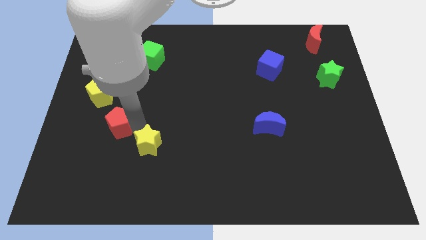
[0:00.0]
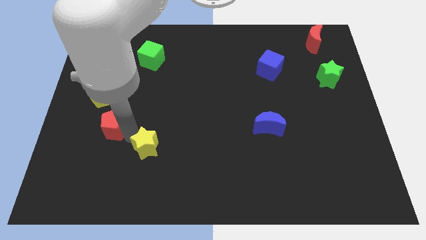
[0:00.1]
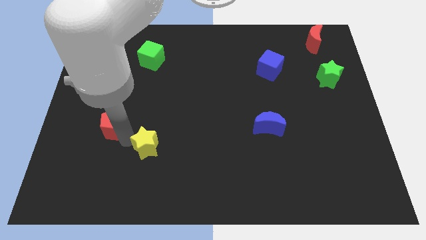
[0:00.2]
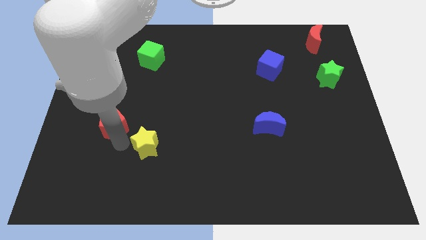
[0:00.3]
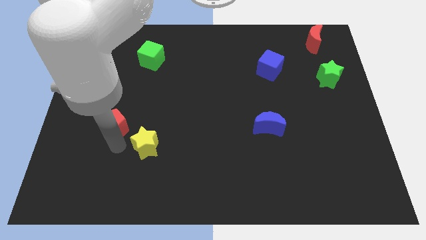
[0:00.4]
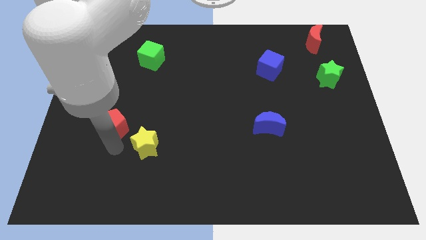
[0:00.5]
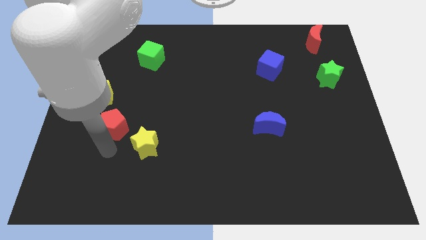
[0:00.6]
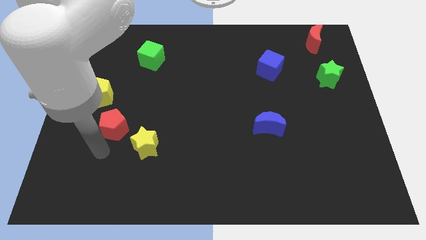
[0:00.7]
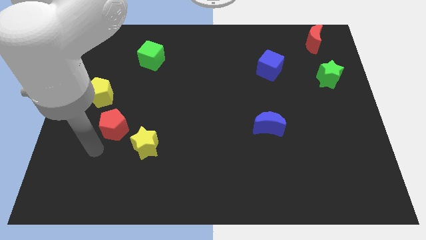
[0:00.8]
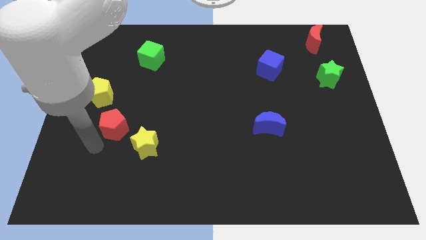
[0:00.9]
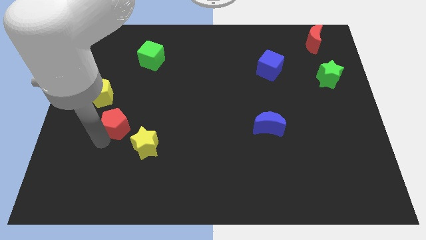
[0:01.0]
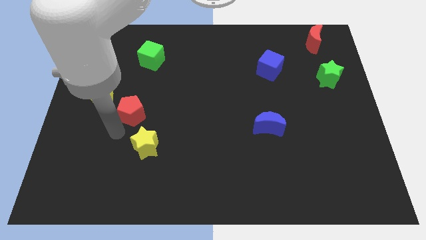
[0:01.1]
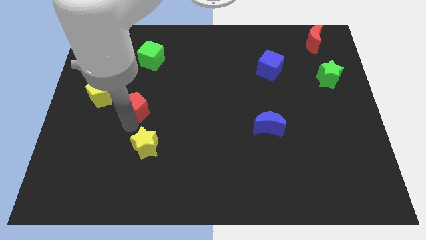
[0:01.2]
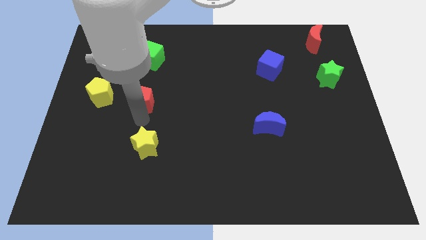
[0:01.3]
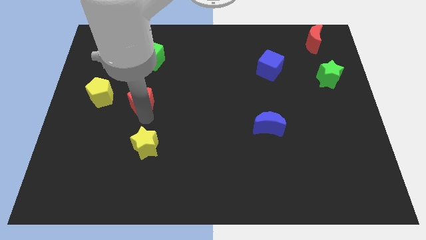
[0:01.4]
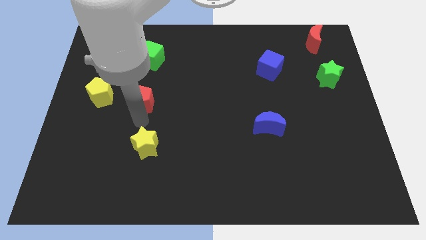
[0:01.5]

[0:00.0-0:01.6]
place the red pentagon in between the green cube and yellow star

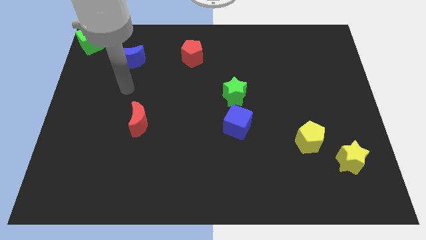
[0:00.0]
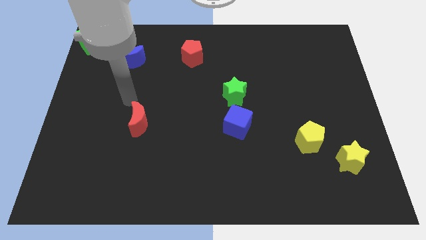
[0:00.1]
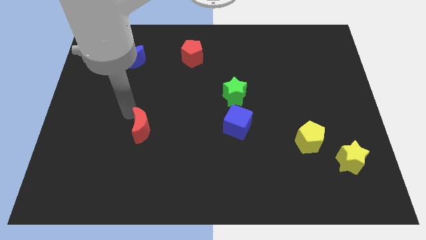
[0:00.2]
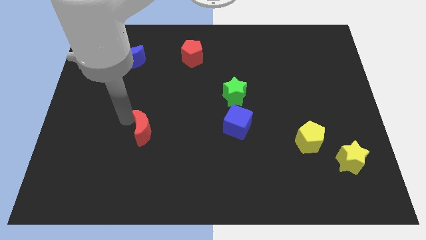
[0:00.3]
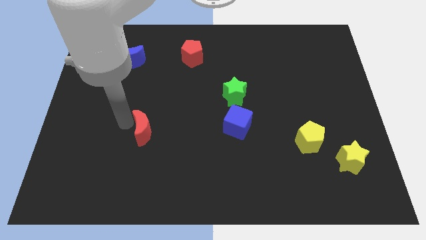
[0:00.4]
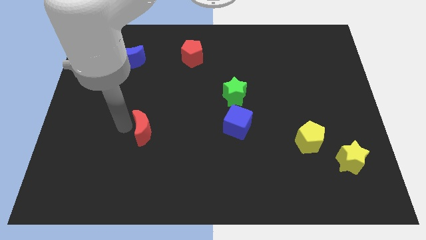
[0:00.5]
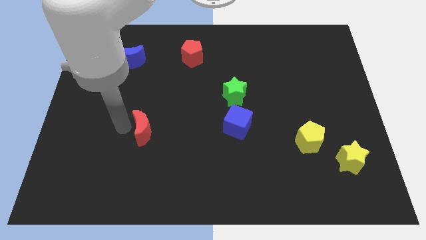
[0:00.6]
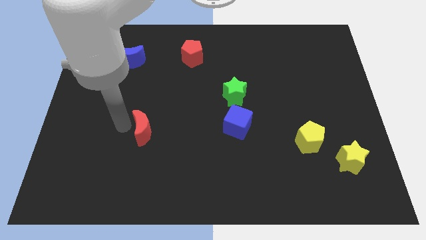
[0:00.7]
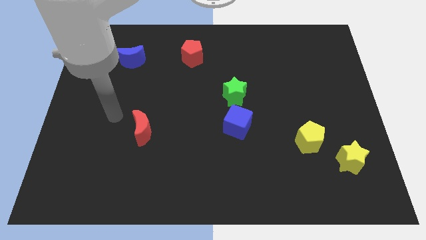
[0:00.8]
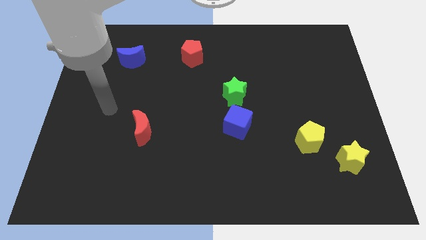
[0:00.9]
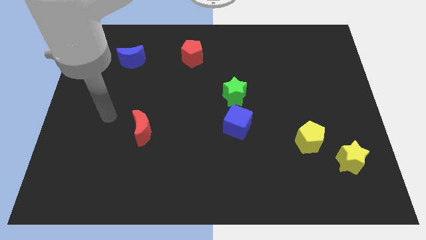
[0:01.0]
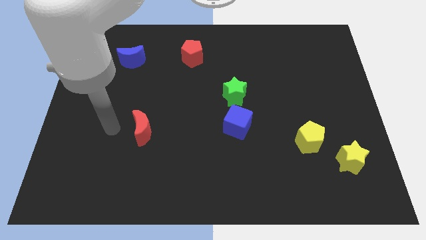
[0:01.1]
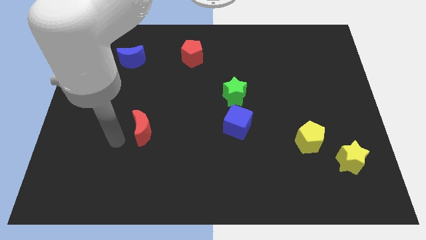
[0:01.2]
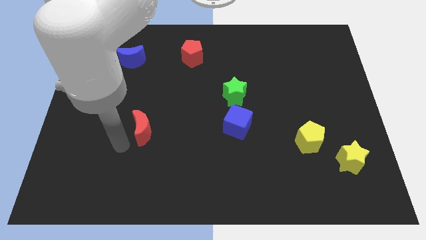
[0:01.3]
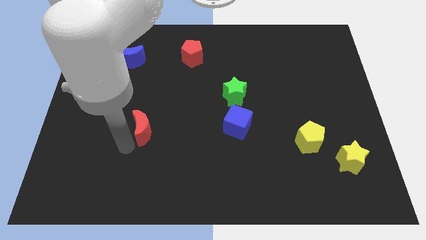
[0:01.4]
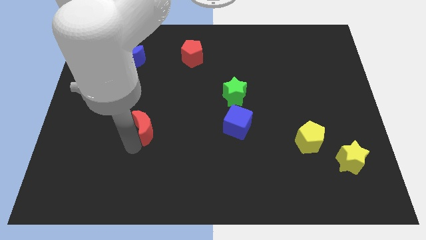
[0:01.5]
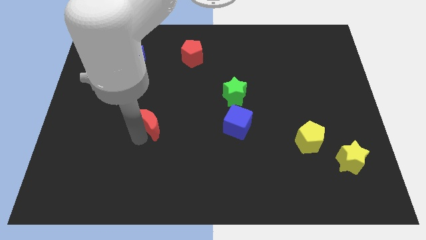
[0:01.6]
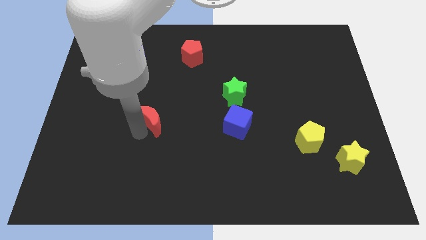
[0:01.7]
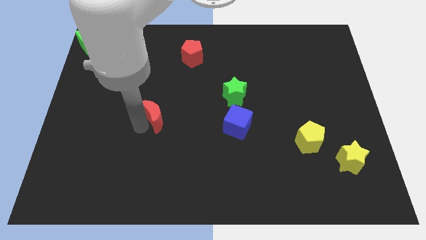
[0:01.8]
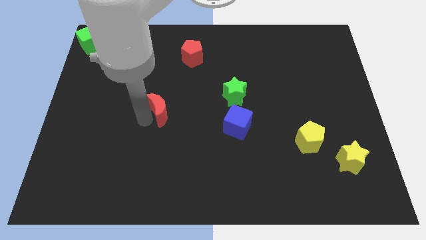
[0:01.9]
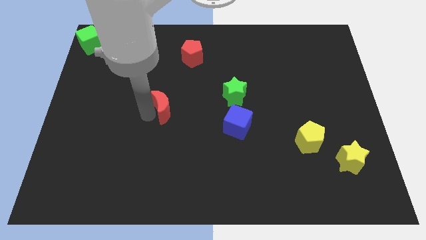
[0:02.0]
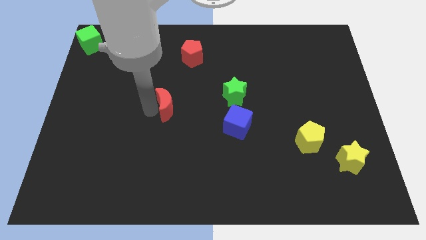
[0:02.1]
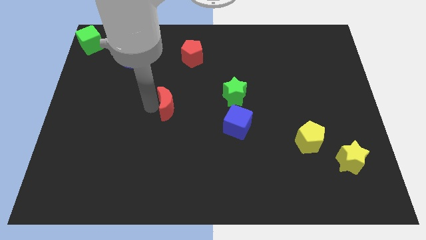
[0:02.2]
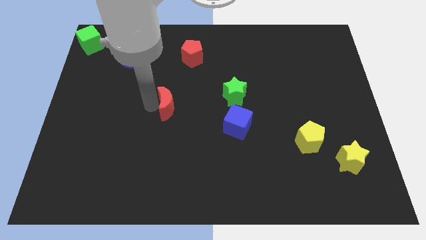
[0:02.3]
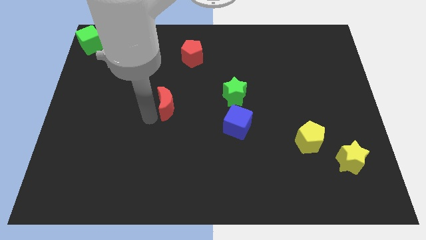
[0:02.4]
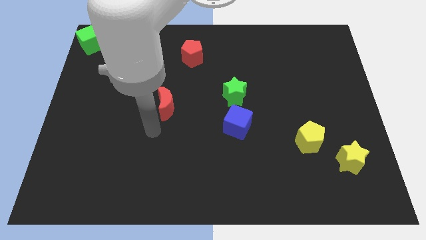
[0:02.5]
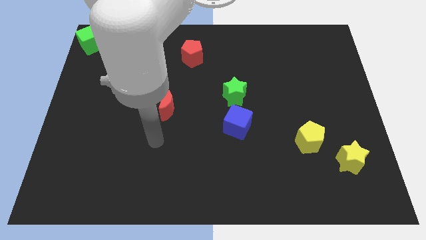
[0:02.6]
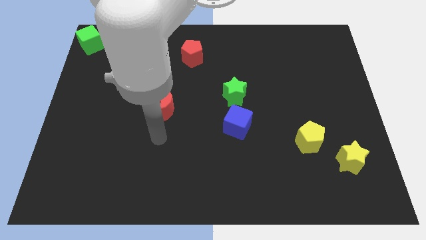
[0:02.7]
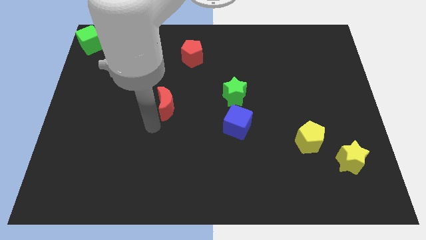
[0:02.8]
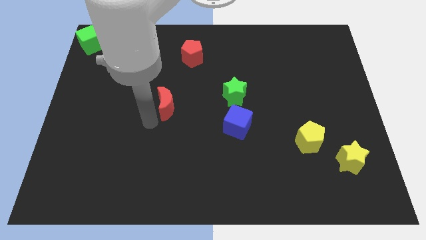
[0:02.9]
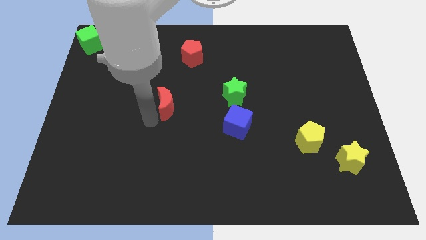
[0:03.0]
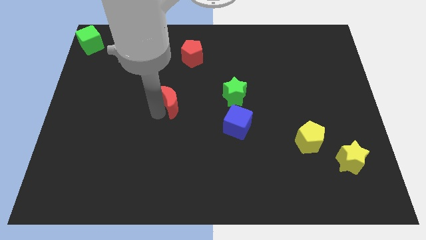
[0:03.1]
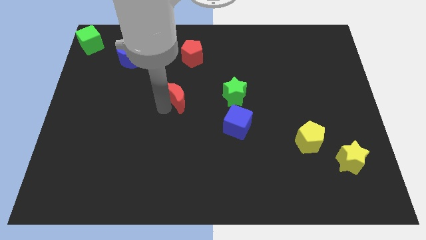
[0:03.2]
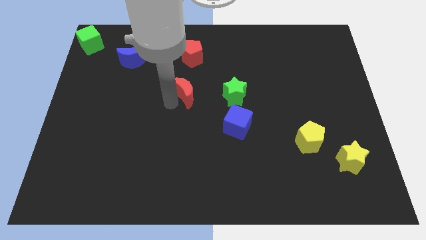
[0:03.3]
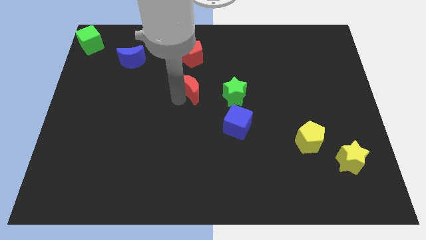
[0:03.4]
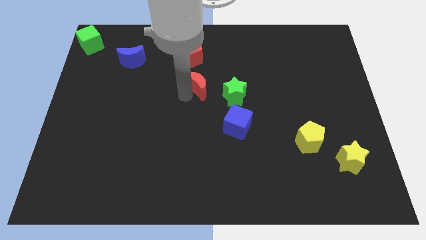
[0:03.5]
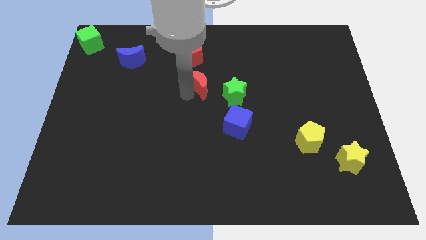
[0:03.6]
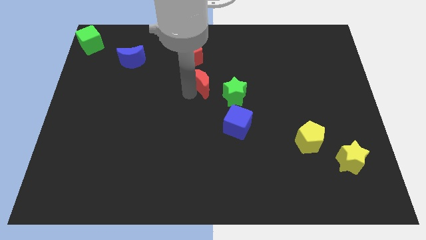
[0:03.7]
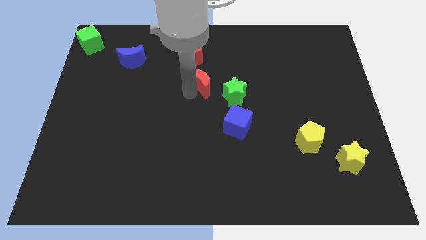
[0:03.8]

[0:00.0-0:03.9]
place the red moon diagonally left to the blue cube

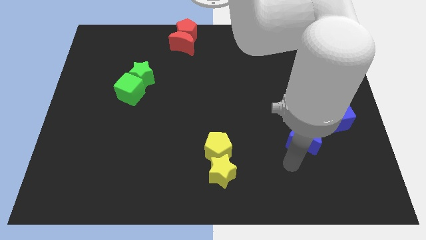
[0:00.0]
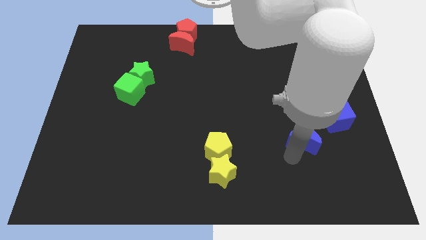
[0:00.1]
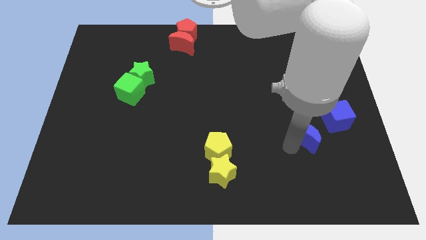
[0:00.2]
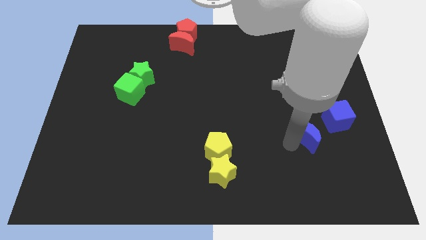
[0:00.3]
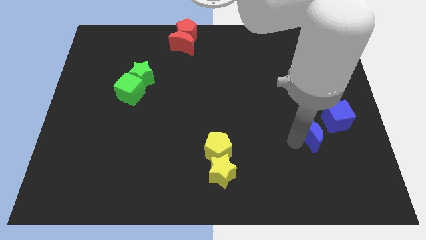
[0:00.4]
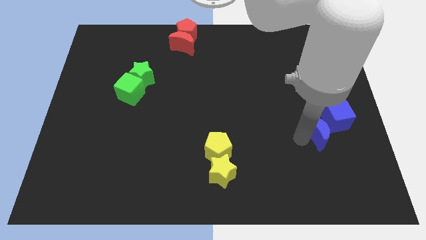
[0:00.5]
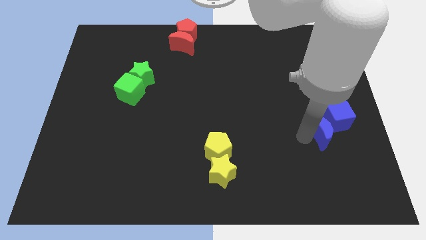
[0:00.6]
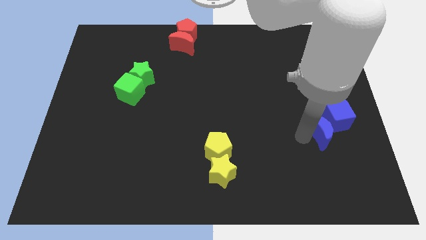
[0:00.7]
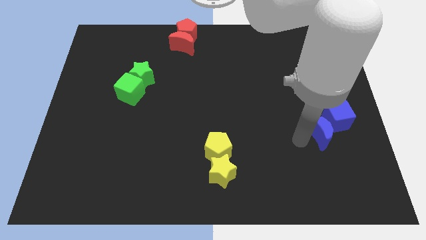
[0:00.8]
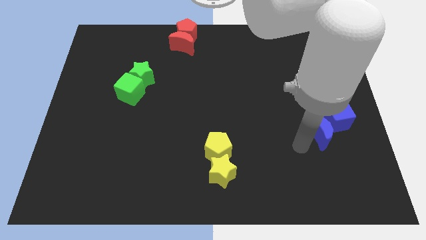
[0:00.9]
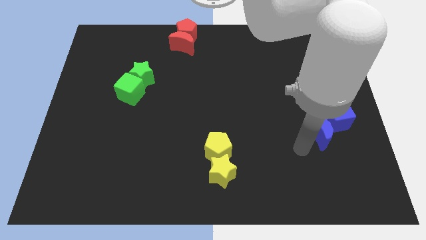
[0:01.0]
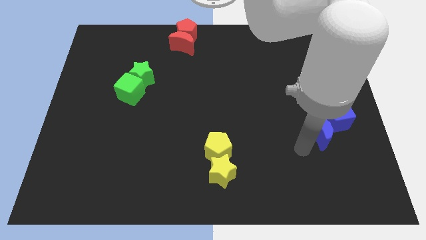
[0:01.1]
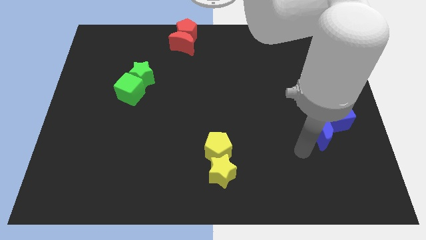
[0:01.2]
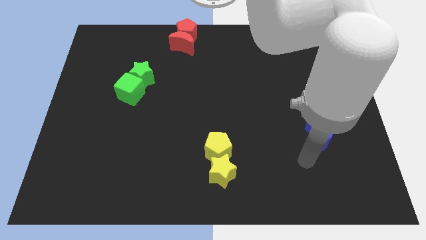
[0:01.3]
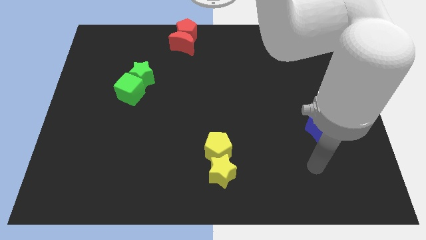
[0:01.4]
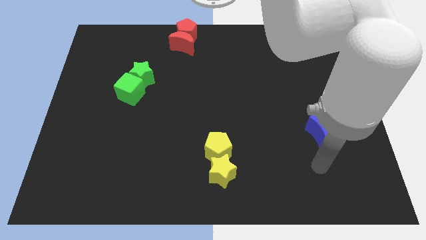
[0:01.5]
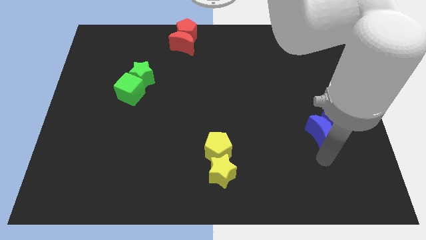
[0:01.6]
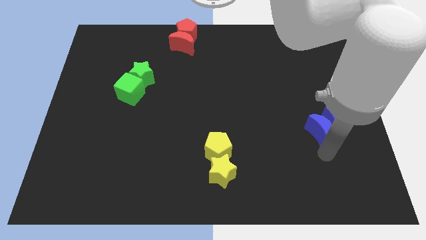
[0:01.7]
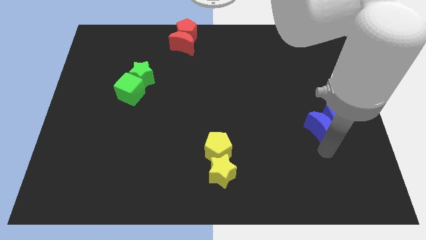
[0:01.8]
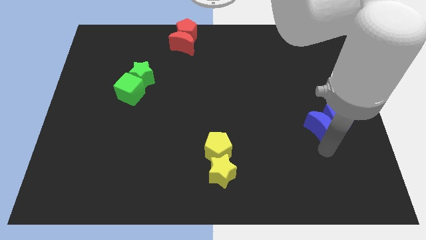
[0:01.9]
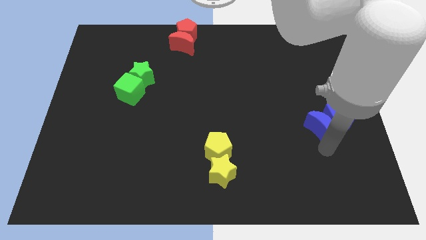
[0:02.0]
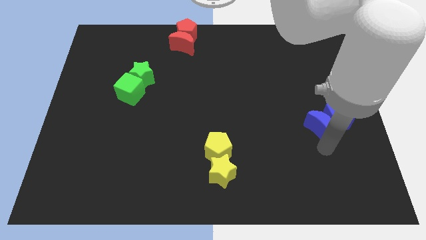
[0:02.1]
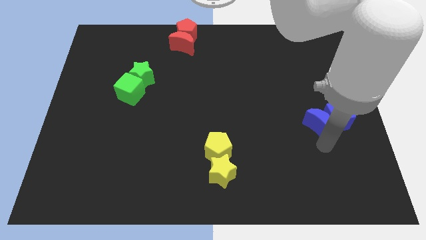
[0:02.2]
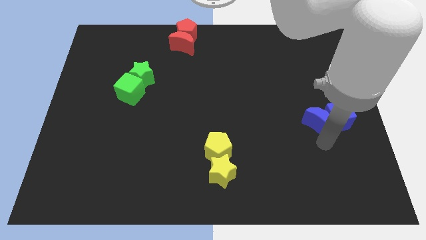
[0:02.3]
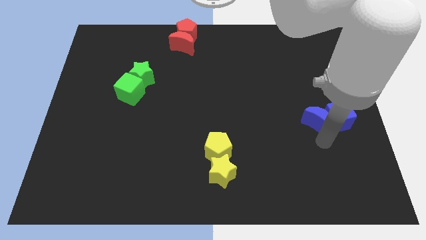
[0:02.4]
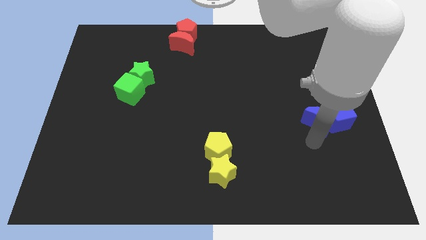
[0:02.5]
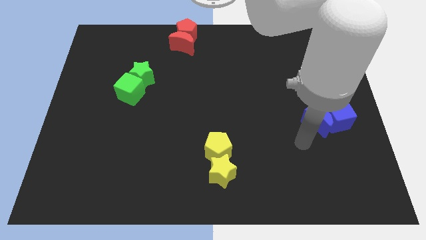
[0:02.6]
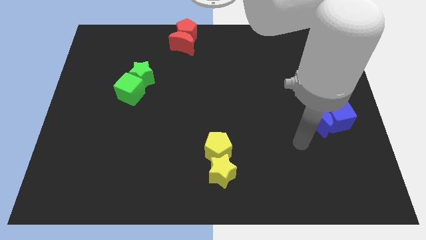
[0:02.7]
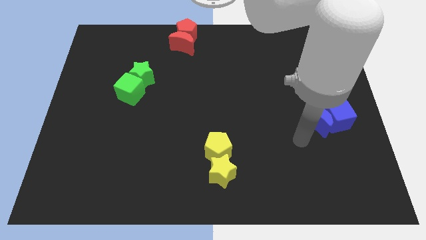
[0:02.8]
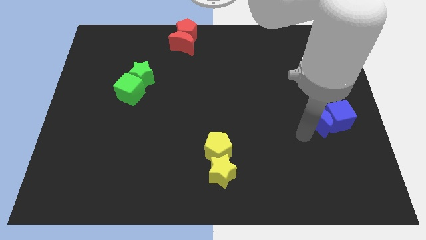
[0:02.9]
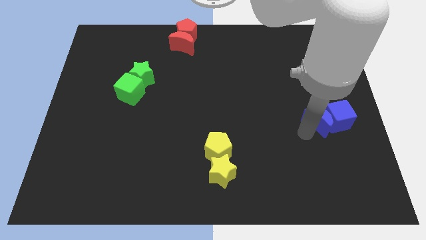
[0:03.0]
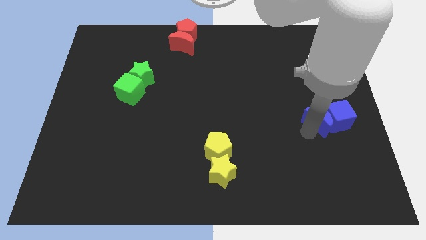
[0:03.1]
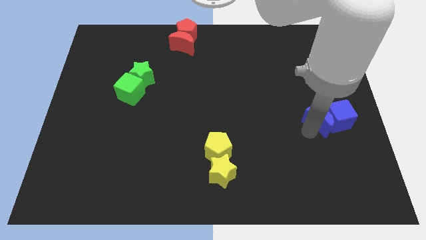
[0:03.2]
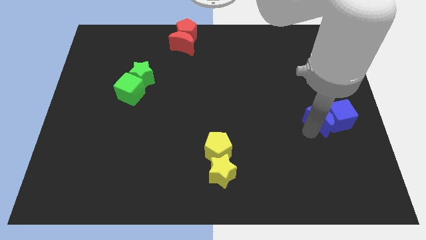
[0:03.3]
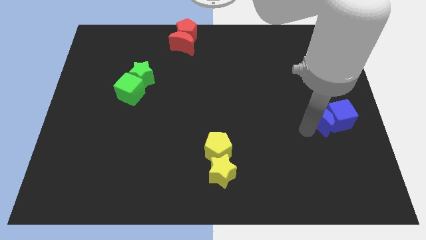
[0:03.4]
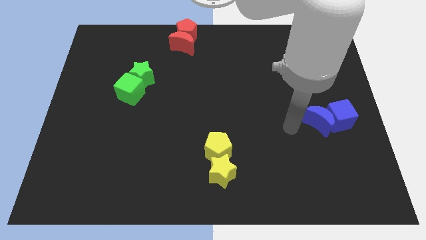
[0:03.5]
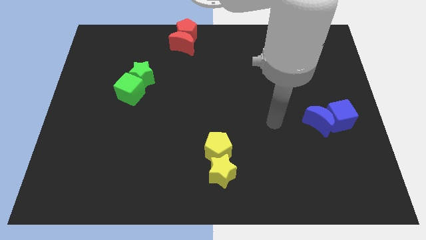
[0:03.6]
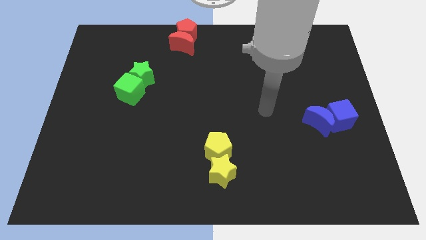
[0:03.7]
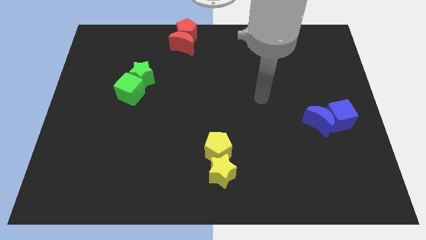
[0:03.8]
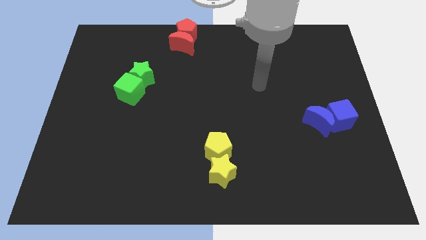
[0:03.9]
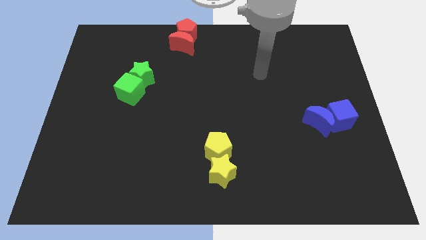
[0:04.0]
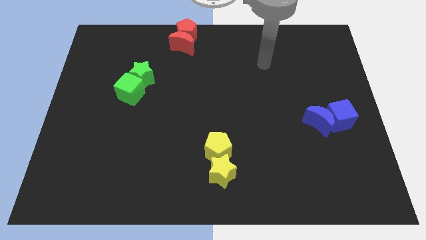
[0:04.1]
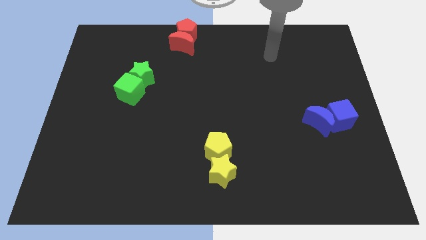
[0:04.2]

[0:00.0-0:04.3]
place the blue moon at the left side of the blue cube
